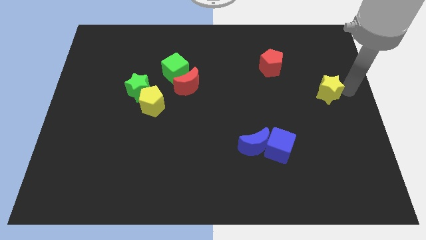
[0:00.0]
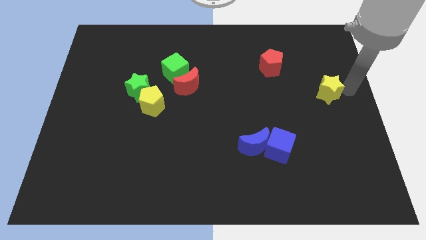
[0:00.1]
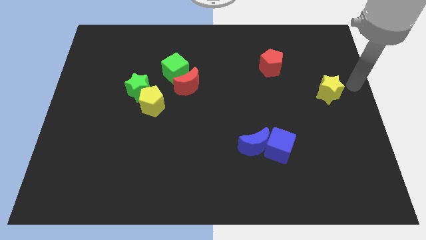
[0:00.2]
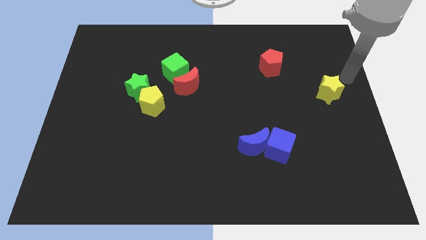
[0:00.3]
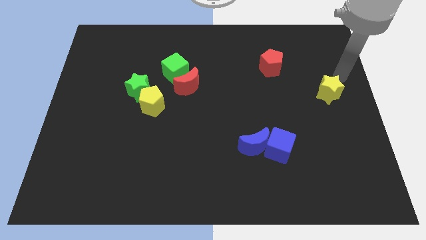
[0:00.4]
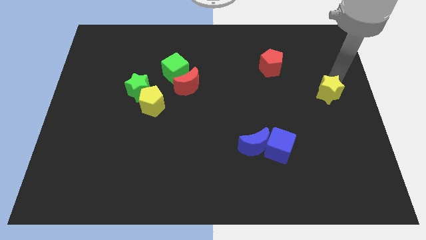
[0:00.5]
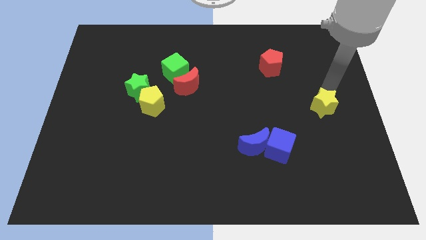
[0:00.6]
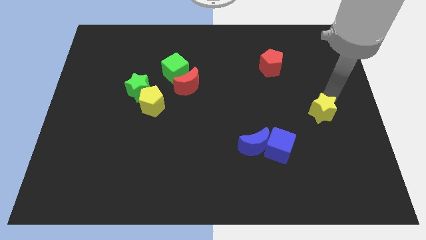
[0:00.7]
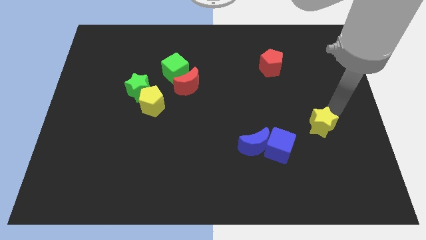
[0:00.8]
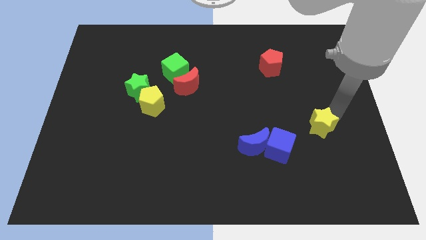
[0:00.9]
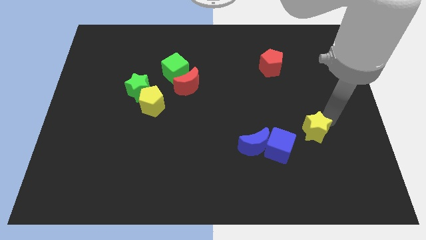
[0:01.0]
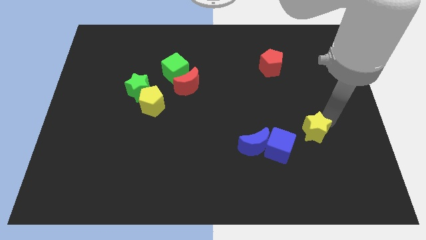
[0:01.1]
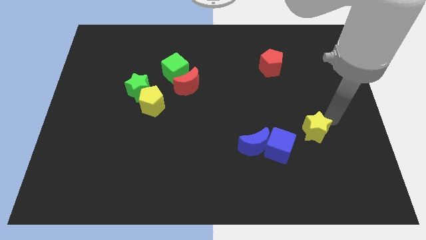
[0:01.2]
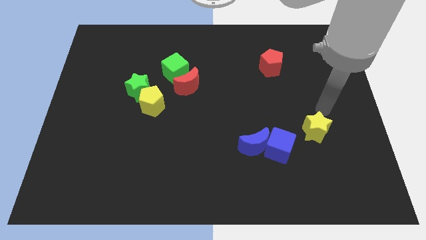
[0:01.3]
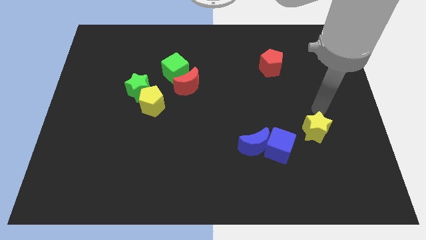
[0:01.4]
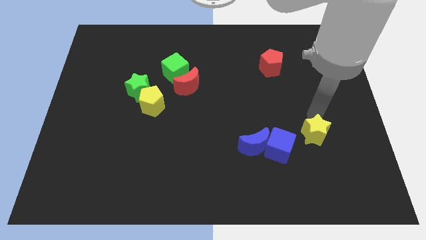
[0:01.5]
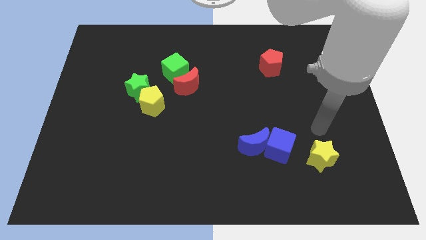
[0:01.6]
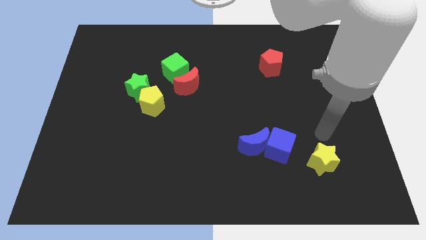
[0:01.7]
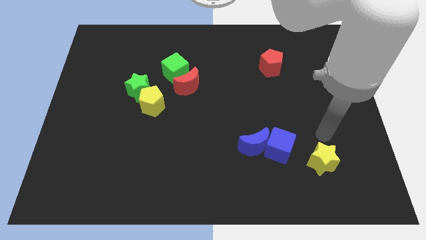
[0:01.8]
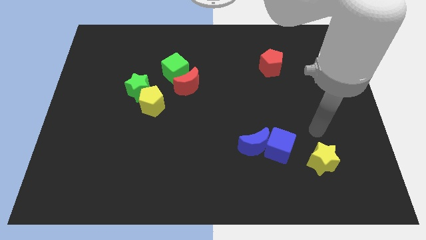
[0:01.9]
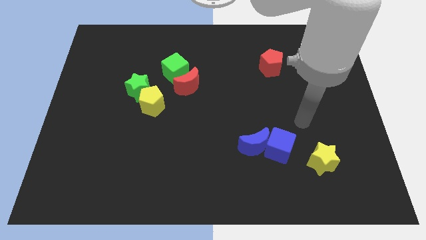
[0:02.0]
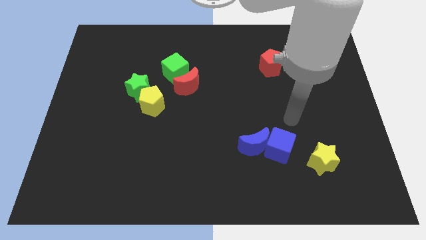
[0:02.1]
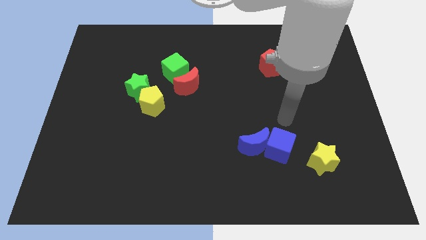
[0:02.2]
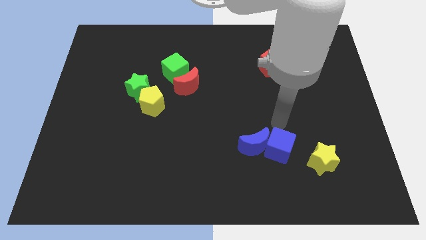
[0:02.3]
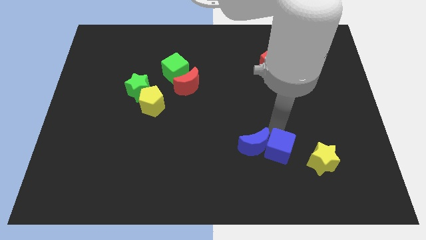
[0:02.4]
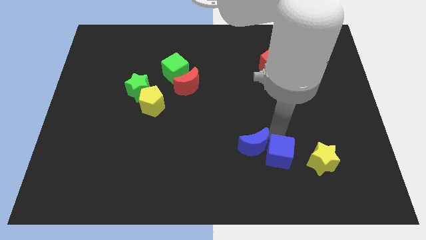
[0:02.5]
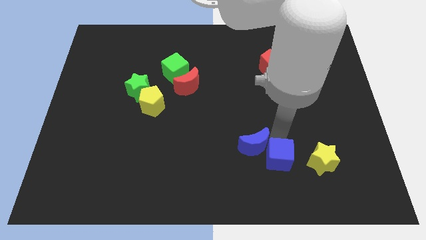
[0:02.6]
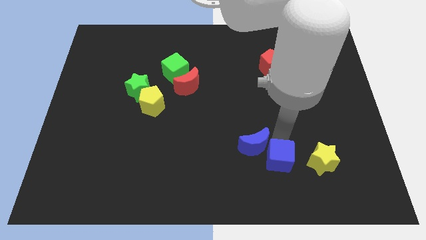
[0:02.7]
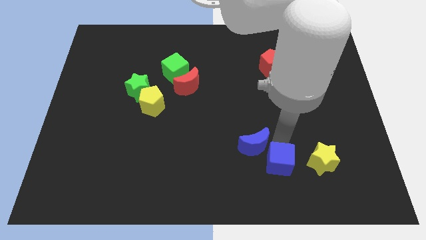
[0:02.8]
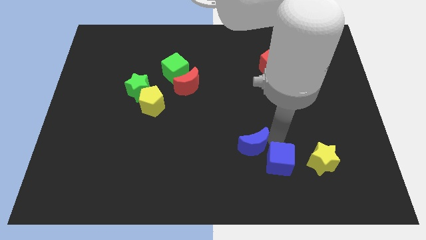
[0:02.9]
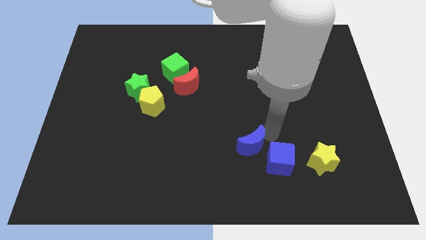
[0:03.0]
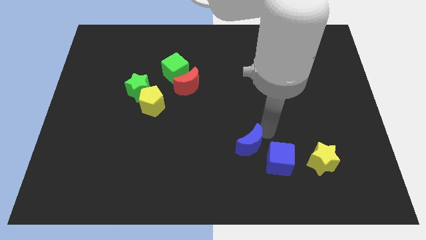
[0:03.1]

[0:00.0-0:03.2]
push the yellow star on the right side of the blue cube

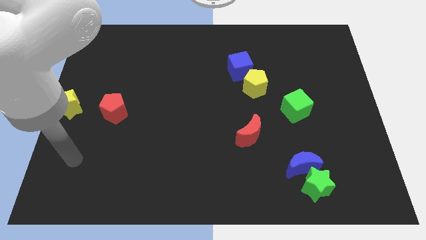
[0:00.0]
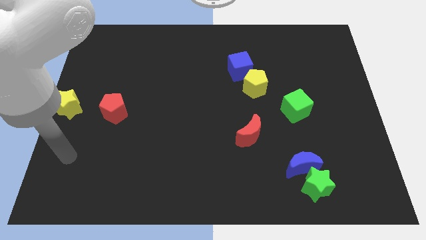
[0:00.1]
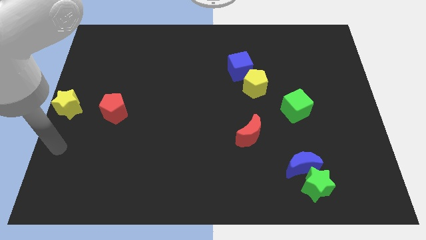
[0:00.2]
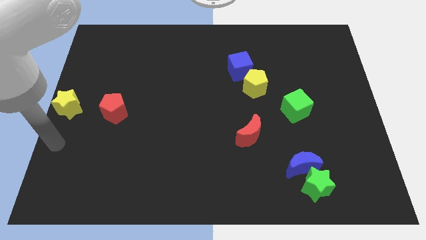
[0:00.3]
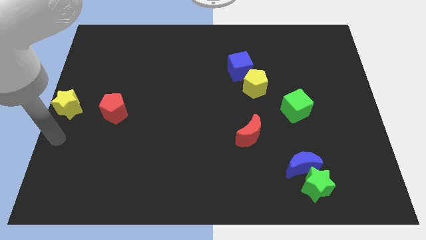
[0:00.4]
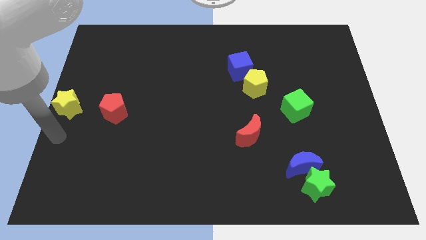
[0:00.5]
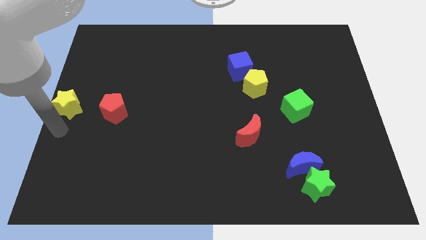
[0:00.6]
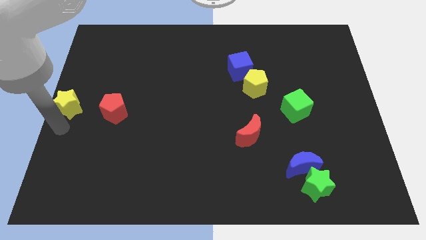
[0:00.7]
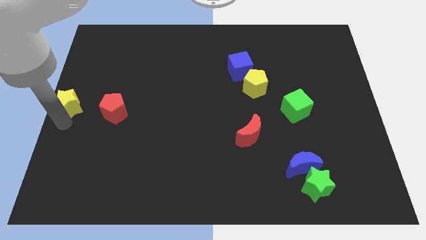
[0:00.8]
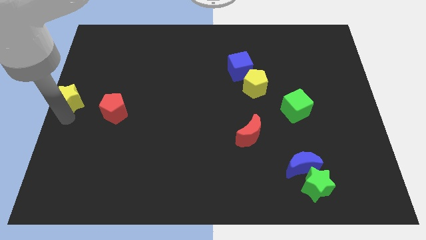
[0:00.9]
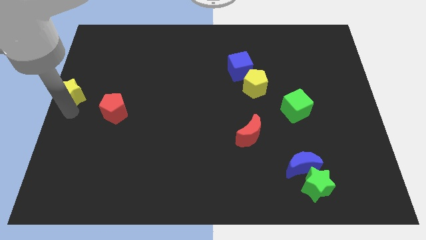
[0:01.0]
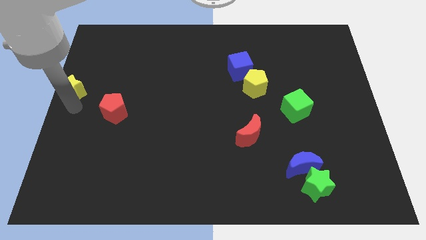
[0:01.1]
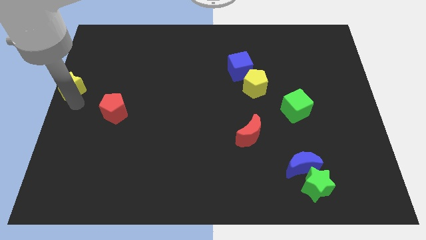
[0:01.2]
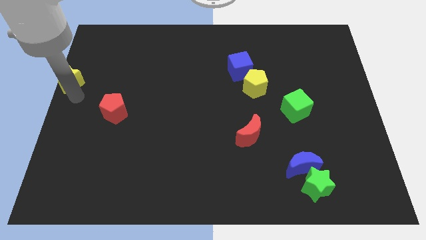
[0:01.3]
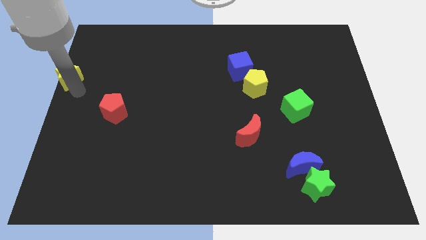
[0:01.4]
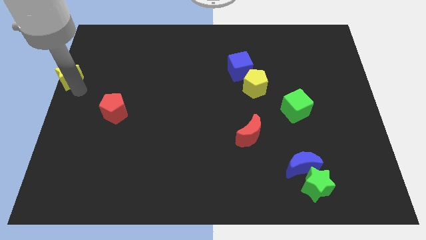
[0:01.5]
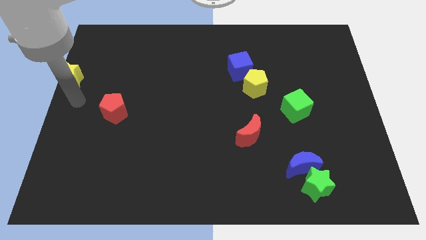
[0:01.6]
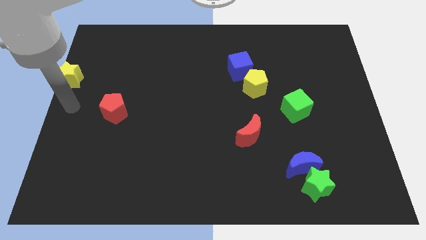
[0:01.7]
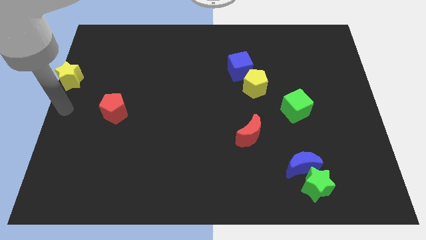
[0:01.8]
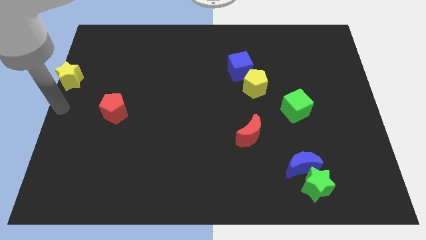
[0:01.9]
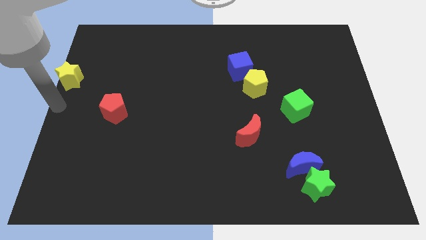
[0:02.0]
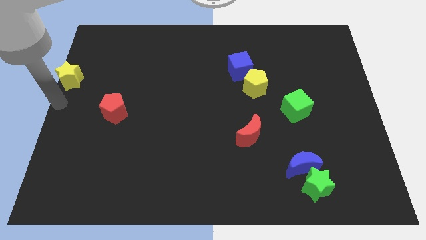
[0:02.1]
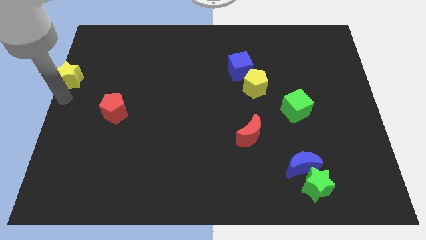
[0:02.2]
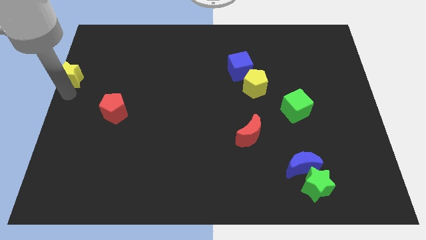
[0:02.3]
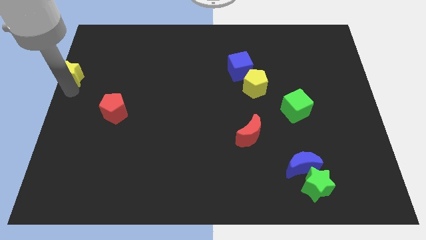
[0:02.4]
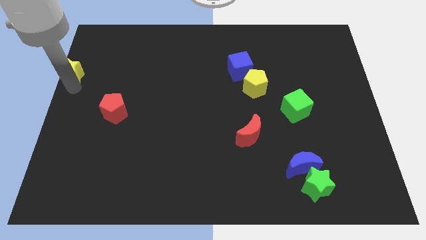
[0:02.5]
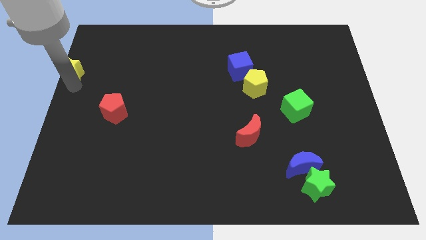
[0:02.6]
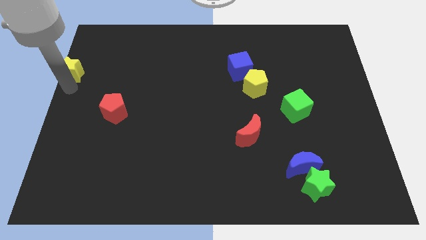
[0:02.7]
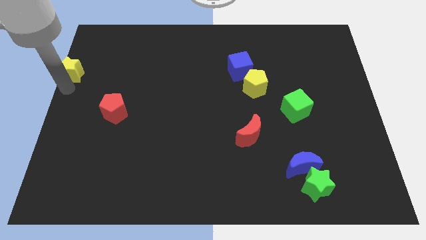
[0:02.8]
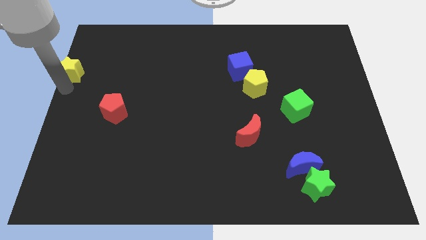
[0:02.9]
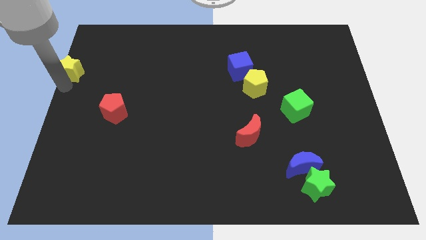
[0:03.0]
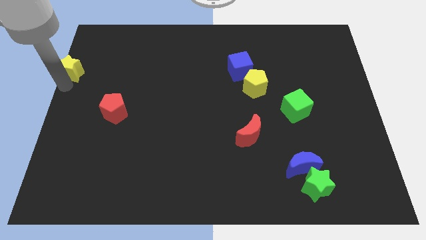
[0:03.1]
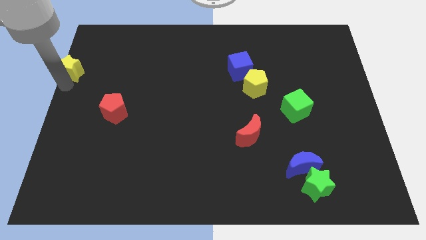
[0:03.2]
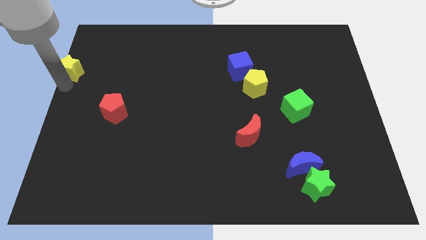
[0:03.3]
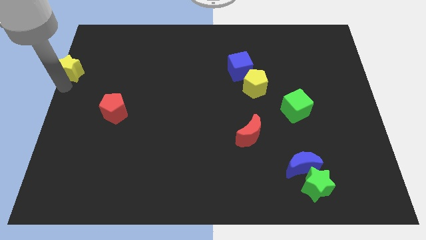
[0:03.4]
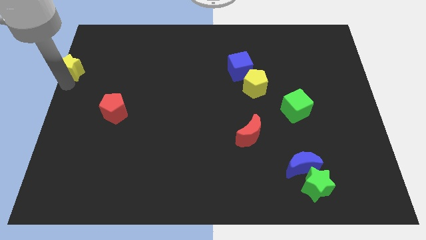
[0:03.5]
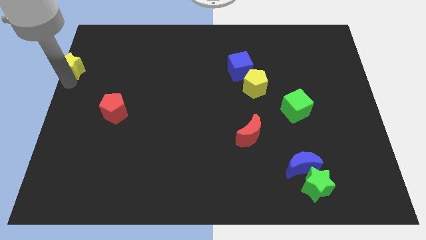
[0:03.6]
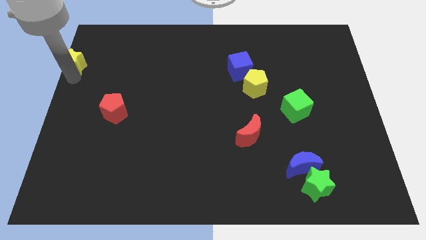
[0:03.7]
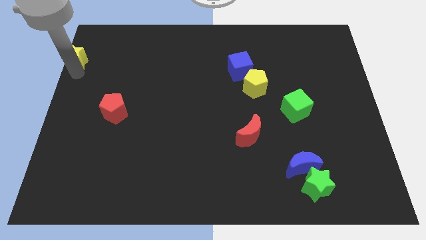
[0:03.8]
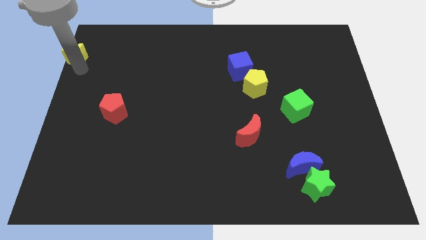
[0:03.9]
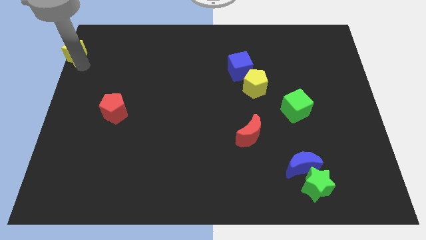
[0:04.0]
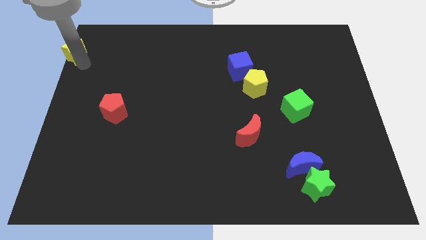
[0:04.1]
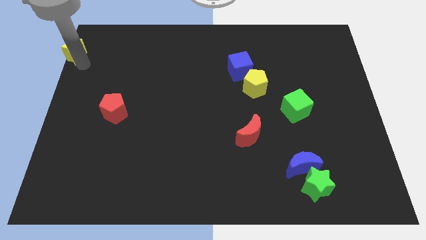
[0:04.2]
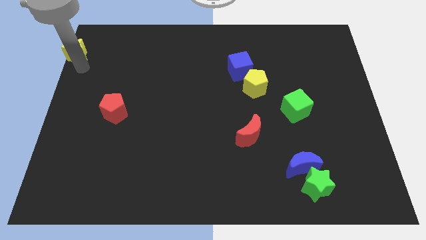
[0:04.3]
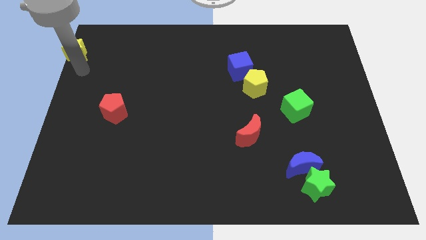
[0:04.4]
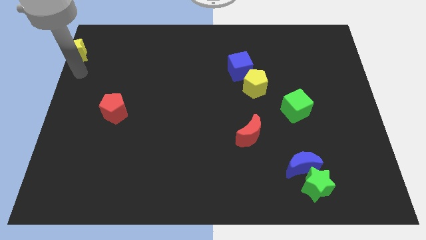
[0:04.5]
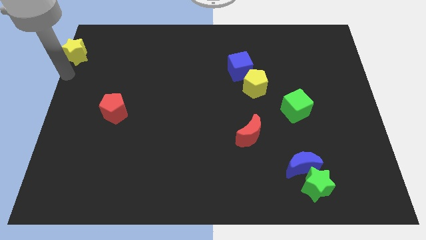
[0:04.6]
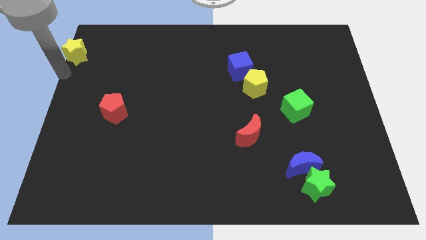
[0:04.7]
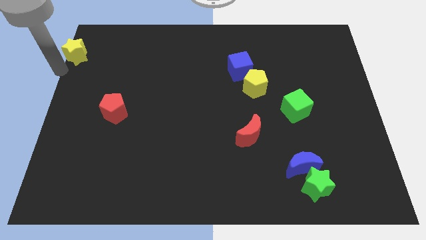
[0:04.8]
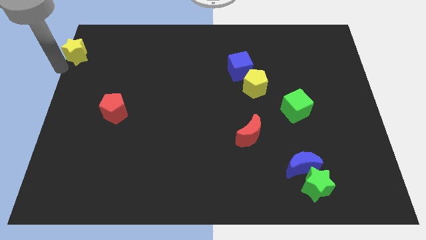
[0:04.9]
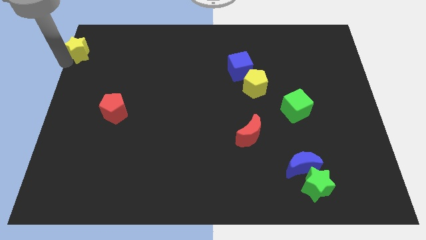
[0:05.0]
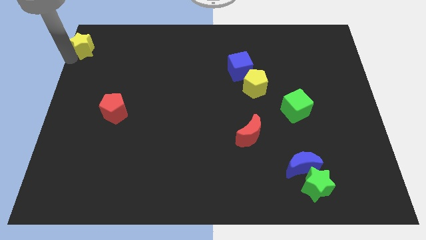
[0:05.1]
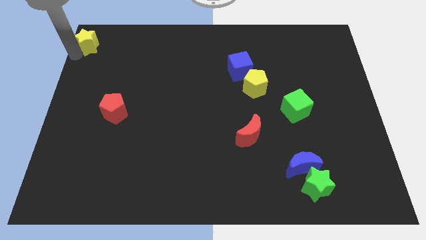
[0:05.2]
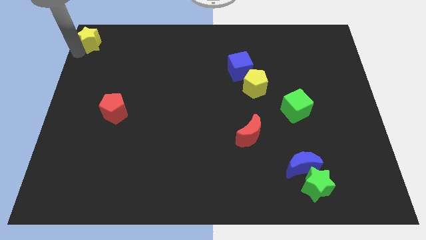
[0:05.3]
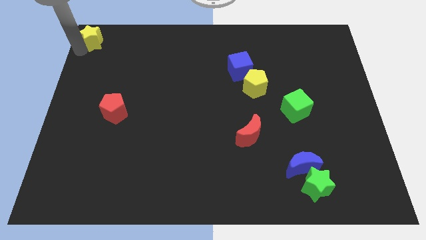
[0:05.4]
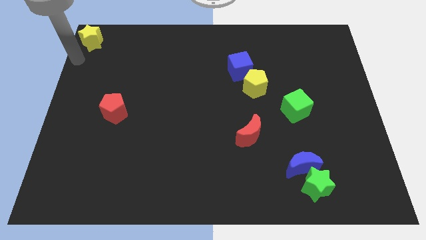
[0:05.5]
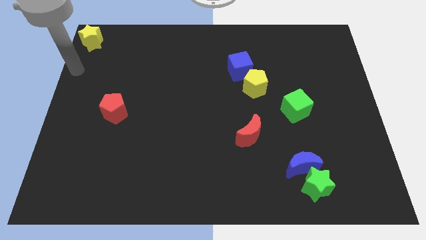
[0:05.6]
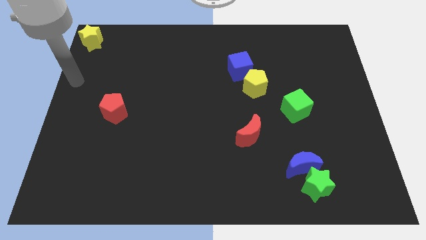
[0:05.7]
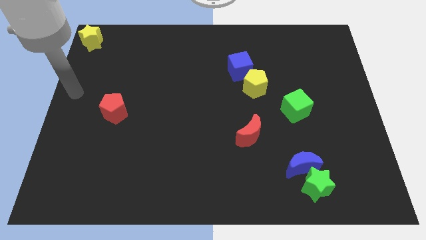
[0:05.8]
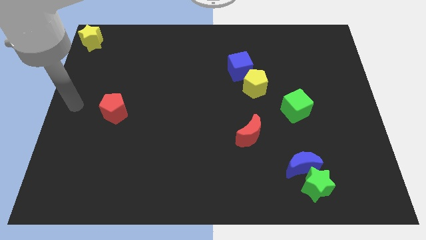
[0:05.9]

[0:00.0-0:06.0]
push the yellow star to the top left corner of the board
